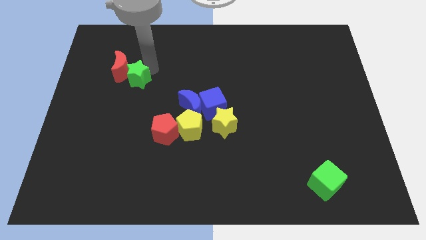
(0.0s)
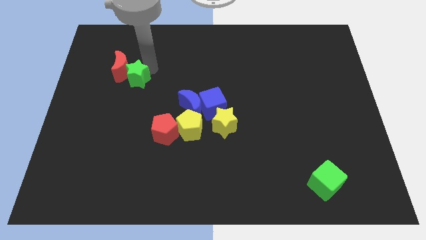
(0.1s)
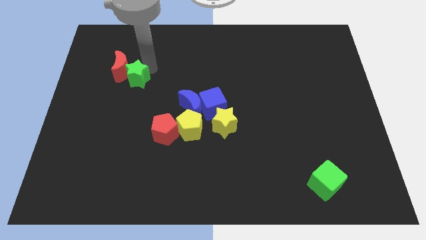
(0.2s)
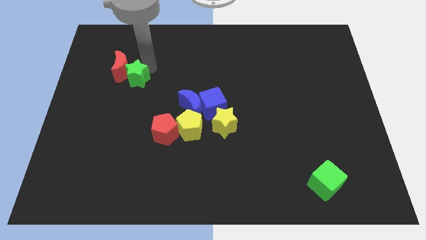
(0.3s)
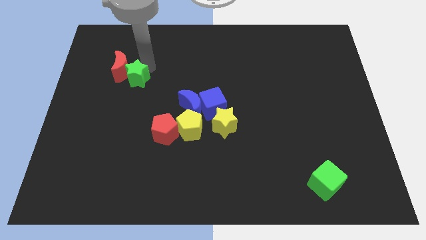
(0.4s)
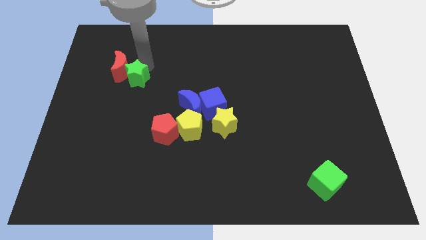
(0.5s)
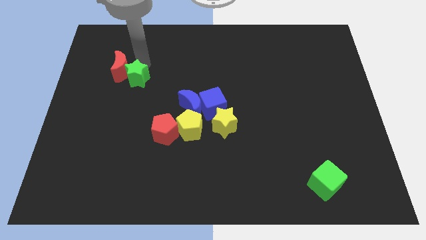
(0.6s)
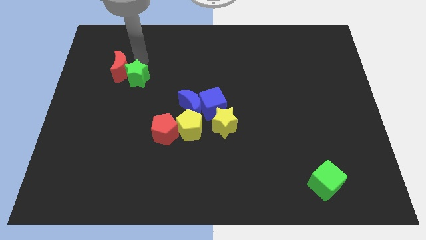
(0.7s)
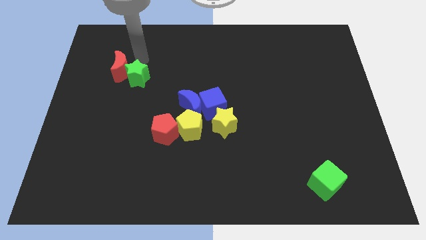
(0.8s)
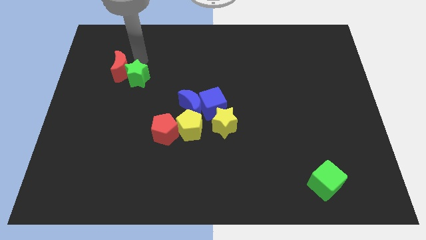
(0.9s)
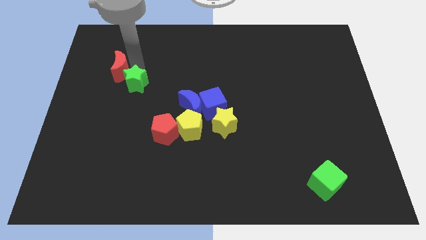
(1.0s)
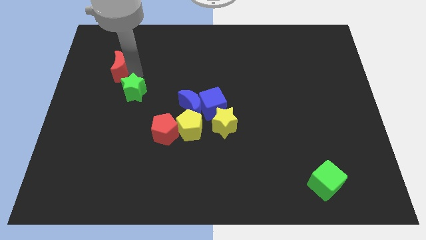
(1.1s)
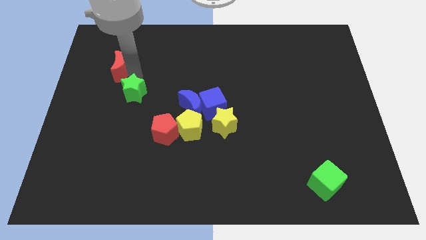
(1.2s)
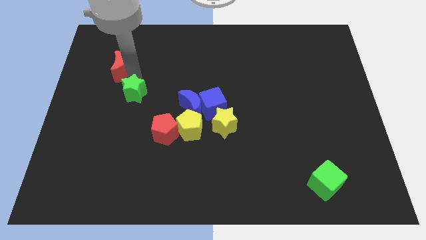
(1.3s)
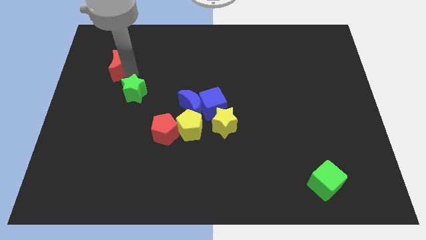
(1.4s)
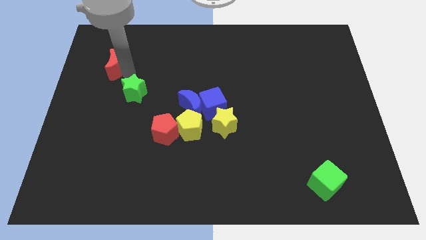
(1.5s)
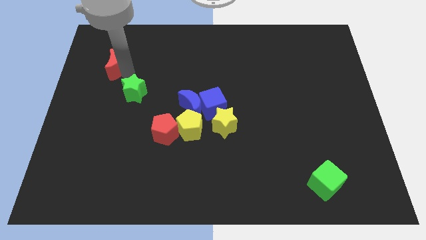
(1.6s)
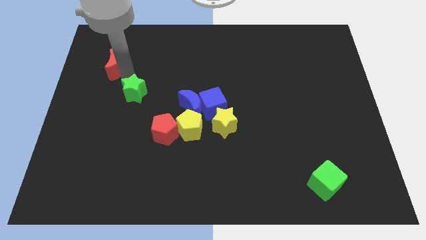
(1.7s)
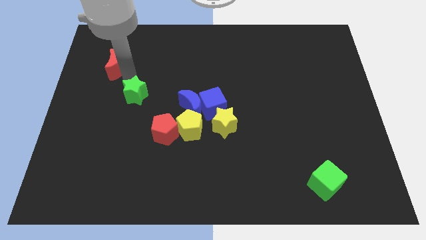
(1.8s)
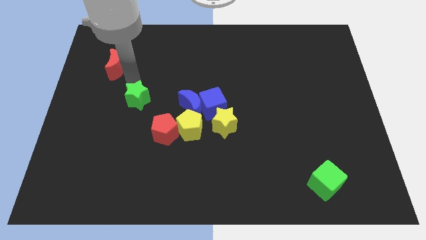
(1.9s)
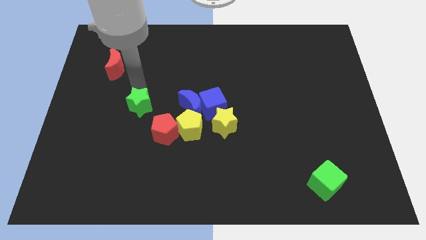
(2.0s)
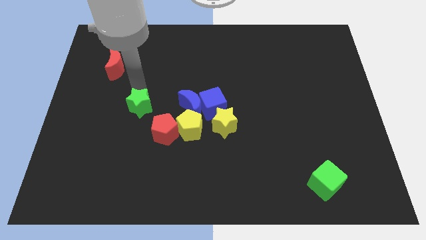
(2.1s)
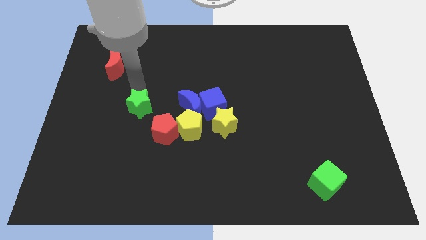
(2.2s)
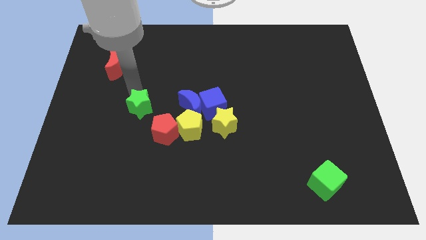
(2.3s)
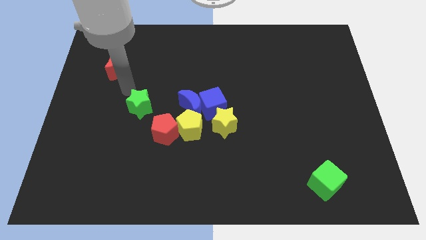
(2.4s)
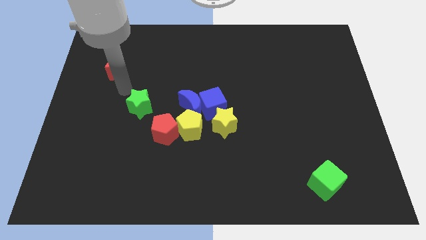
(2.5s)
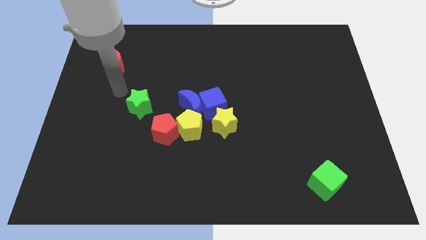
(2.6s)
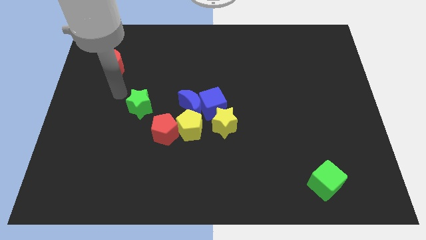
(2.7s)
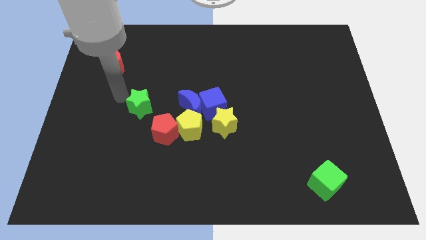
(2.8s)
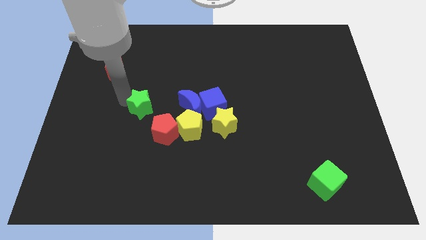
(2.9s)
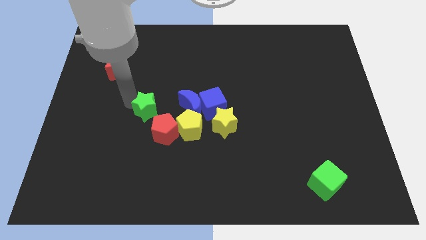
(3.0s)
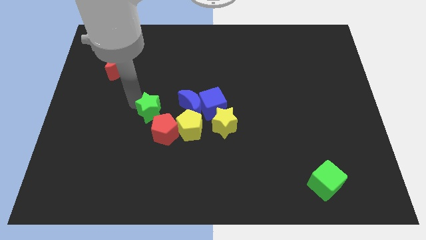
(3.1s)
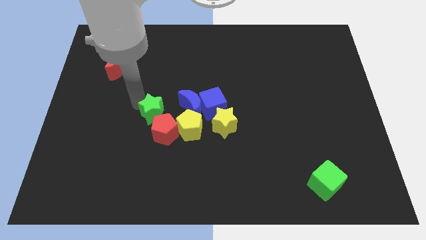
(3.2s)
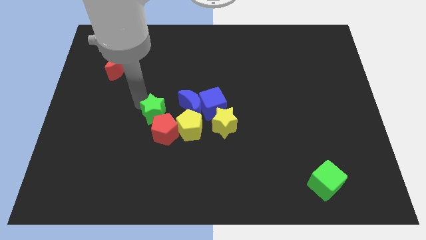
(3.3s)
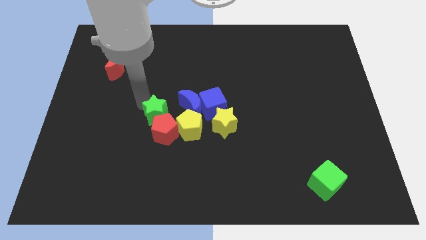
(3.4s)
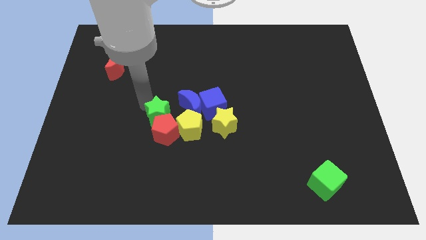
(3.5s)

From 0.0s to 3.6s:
place the green star to the top of red pentagon

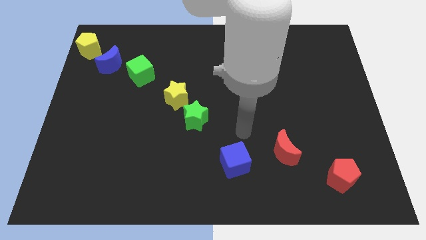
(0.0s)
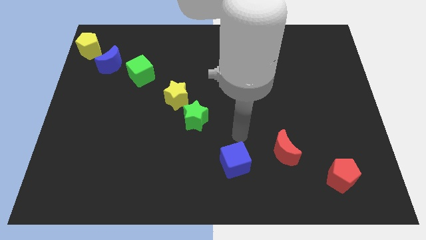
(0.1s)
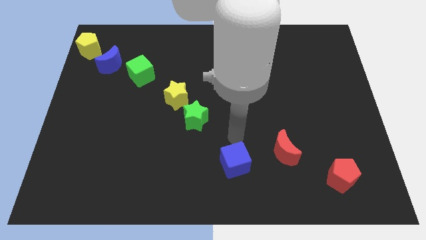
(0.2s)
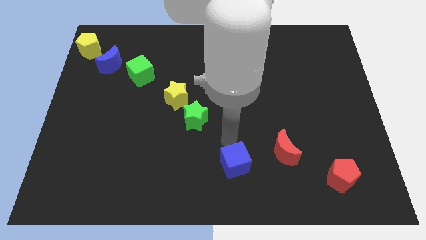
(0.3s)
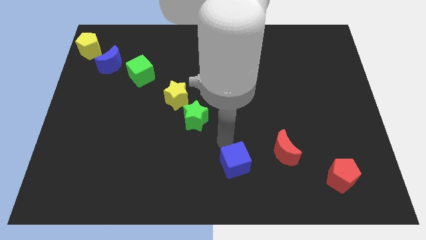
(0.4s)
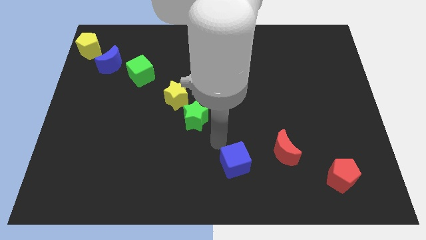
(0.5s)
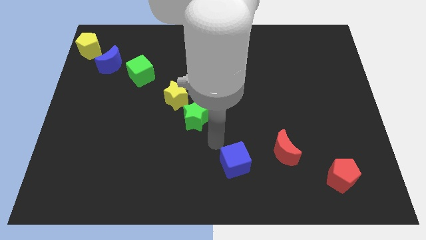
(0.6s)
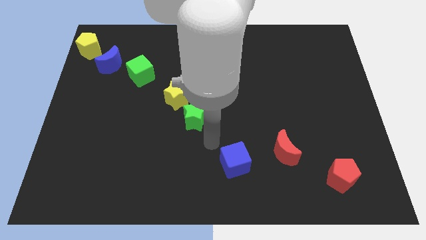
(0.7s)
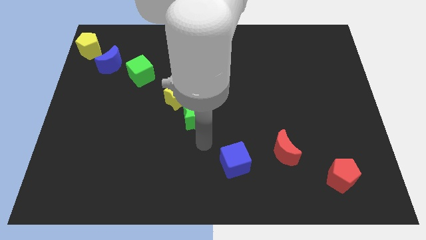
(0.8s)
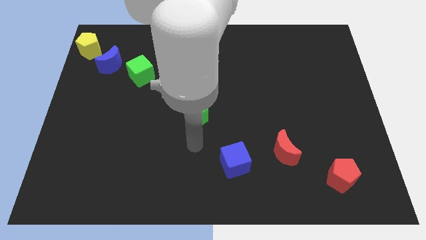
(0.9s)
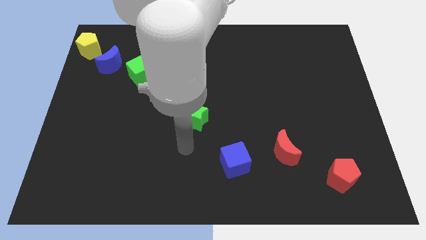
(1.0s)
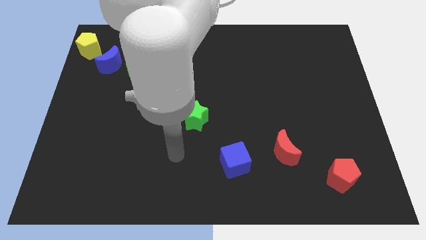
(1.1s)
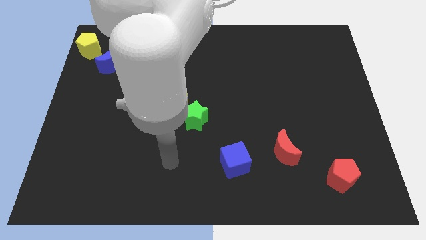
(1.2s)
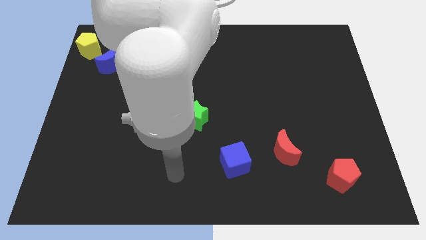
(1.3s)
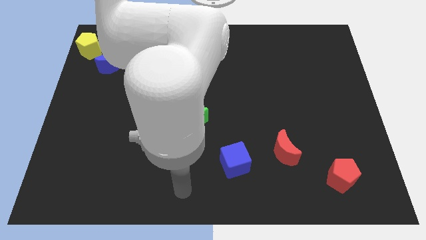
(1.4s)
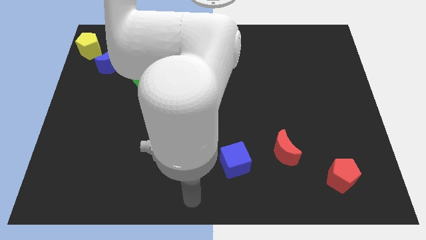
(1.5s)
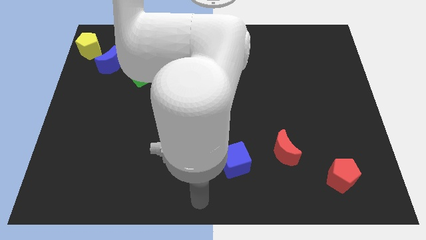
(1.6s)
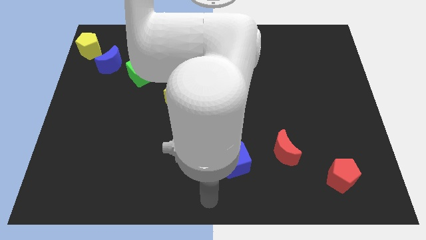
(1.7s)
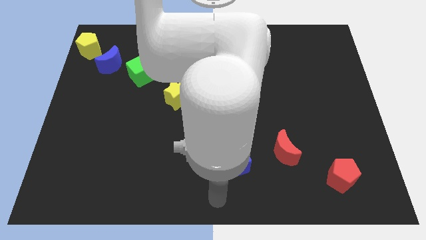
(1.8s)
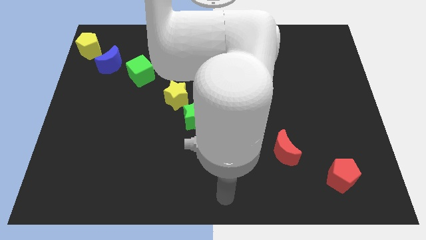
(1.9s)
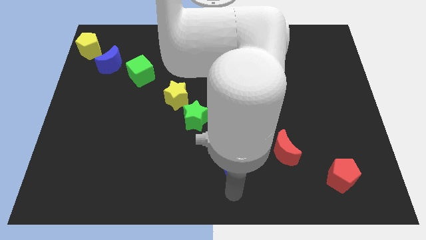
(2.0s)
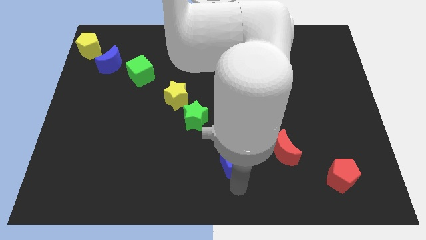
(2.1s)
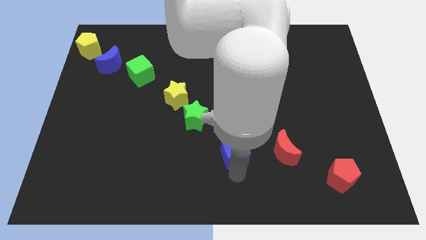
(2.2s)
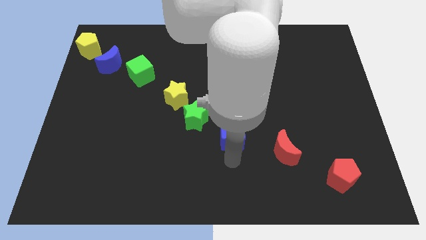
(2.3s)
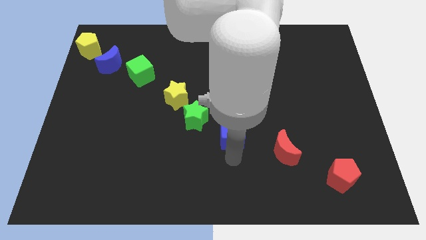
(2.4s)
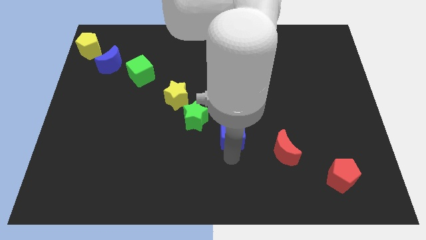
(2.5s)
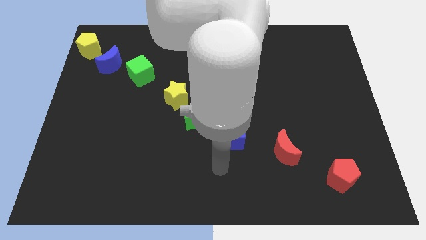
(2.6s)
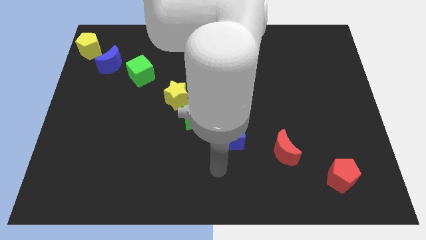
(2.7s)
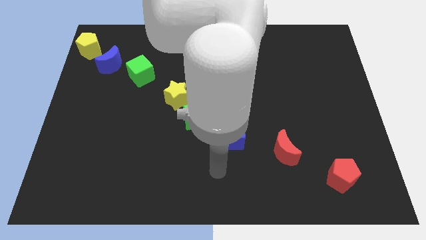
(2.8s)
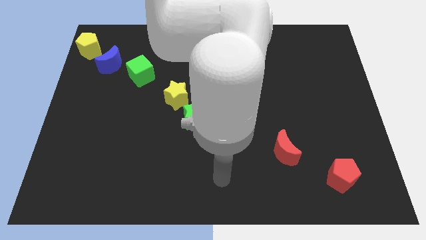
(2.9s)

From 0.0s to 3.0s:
slightly push the blue cube towards up

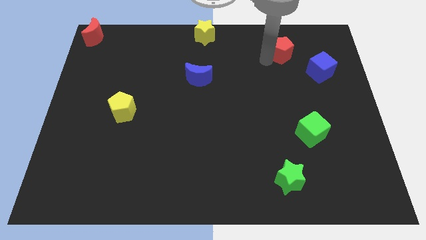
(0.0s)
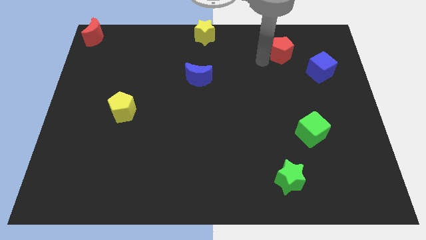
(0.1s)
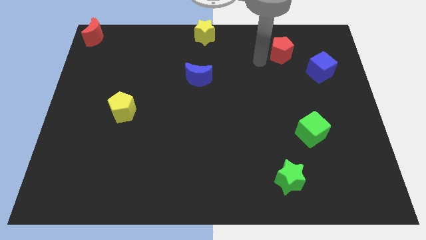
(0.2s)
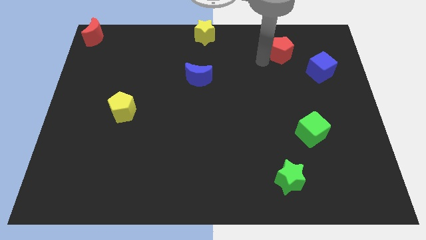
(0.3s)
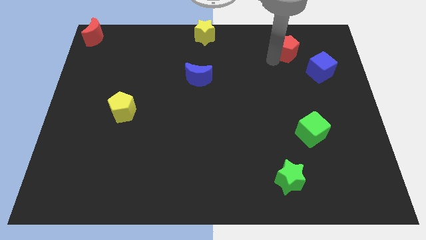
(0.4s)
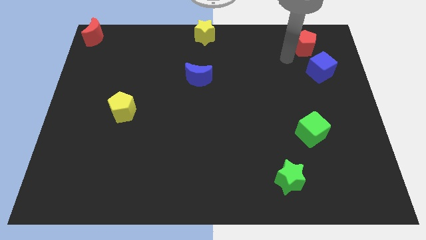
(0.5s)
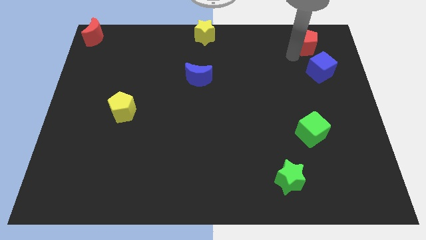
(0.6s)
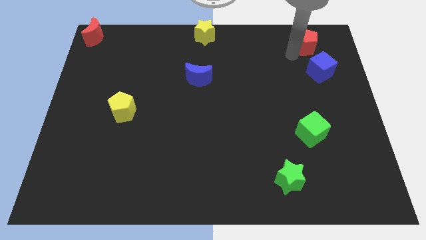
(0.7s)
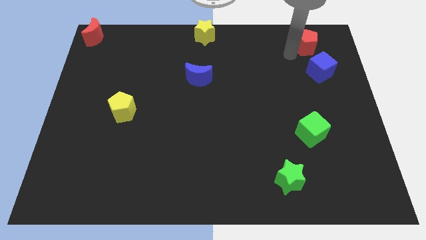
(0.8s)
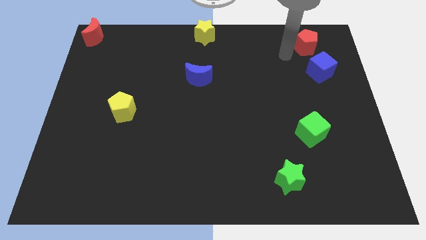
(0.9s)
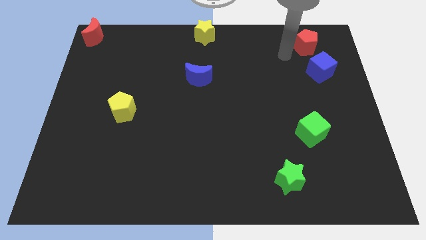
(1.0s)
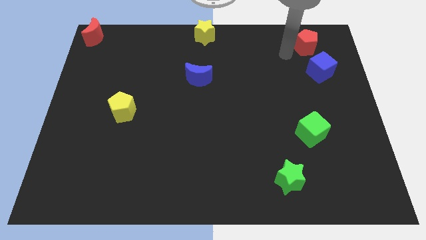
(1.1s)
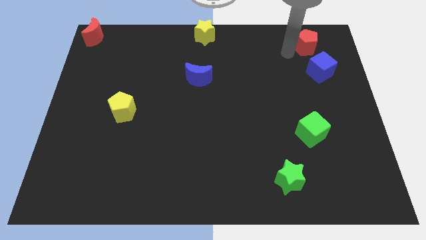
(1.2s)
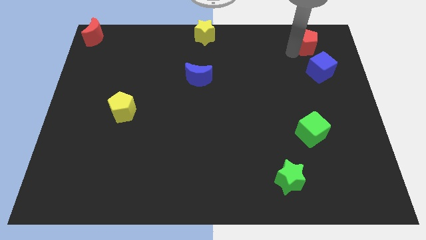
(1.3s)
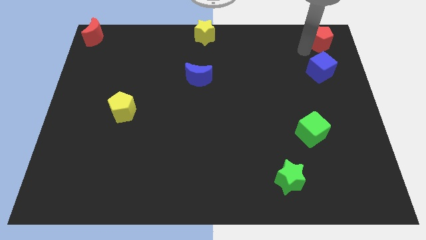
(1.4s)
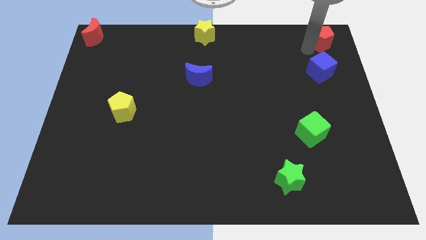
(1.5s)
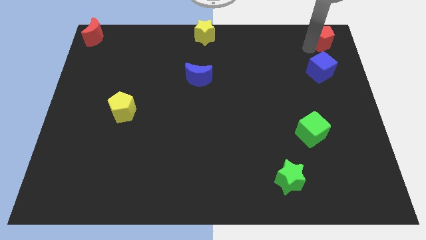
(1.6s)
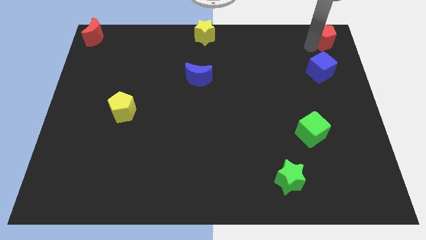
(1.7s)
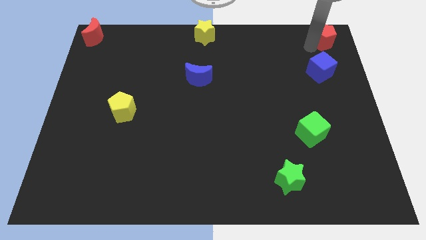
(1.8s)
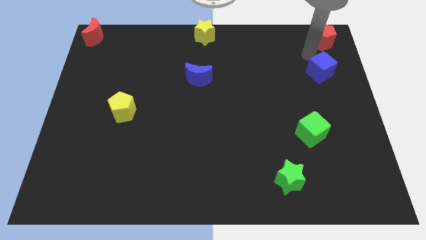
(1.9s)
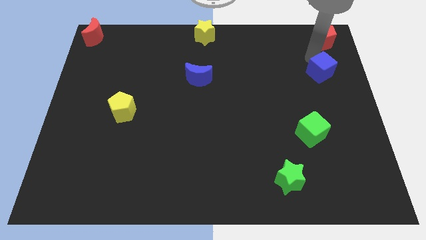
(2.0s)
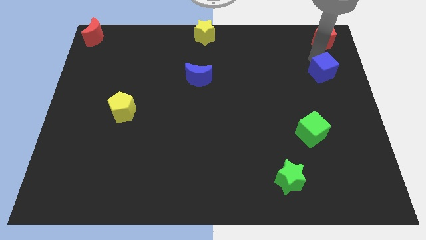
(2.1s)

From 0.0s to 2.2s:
push the red pentagon to the top right of the board

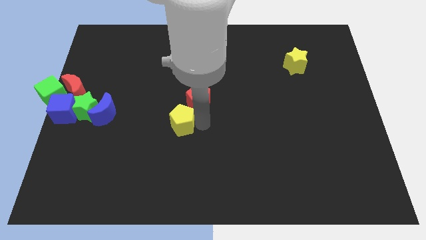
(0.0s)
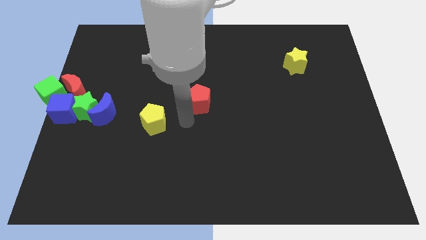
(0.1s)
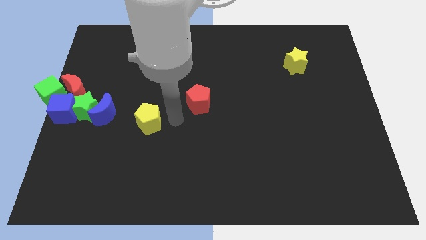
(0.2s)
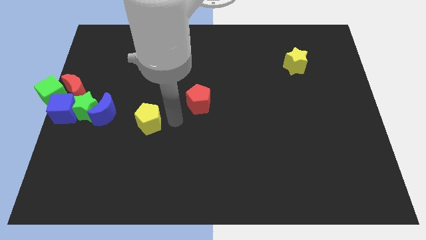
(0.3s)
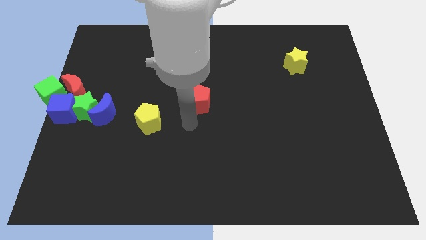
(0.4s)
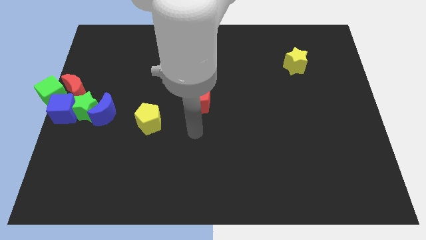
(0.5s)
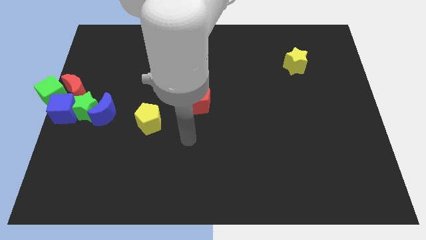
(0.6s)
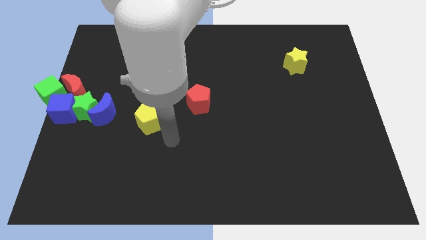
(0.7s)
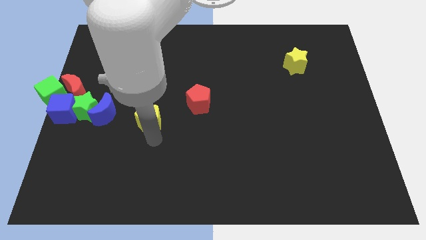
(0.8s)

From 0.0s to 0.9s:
place the yellow pentagon right to the blue moon
